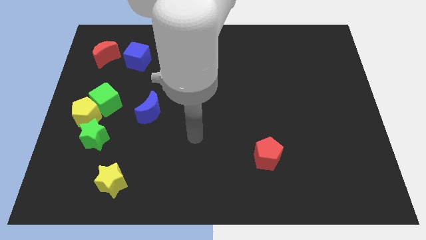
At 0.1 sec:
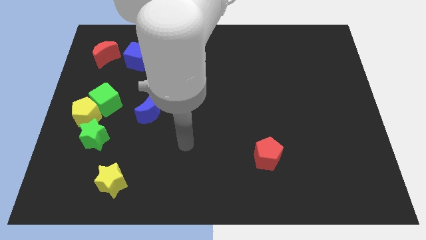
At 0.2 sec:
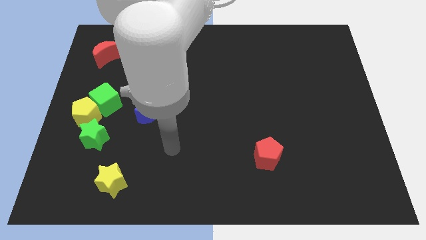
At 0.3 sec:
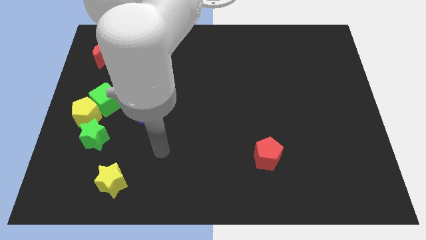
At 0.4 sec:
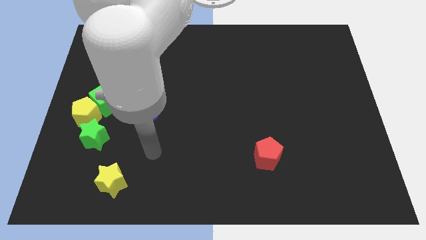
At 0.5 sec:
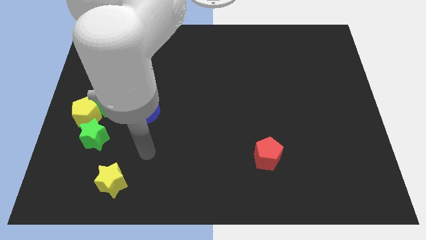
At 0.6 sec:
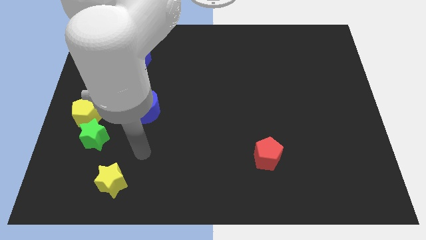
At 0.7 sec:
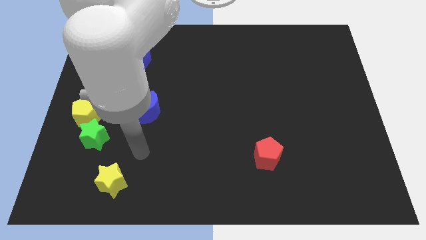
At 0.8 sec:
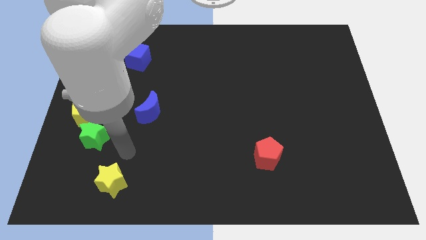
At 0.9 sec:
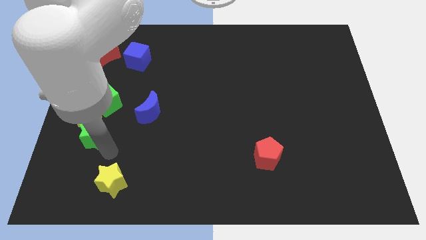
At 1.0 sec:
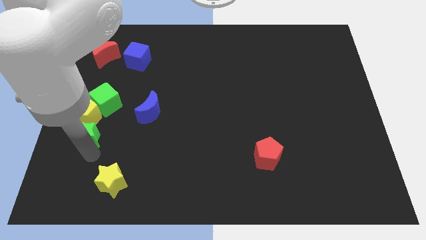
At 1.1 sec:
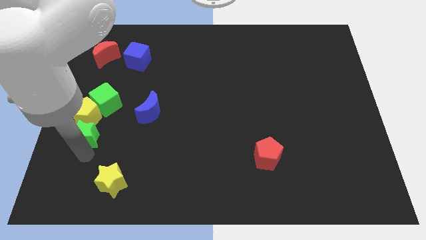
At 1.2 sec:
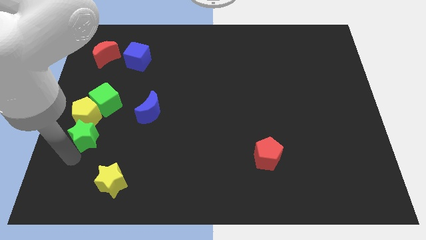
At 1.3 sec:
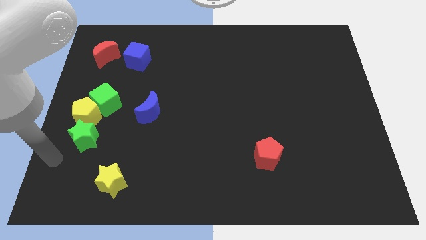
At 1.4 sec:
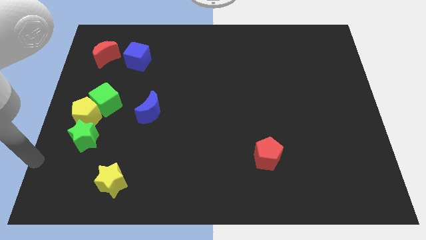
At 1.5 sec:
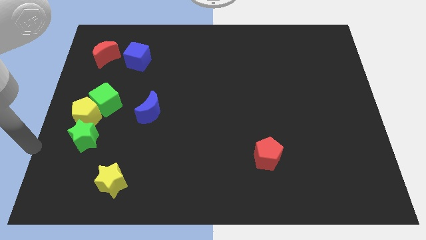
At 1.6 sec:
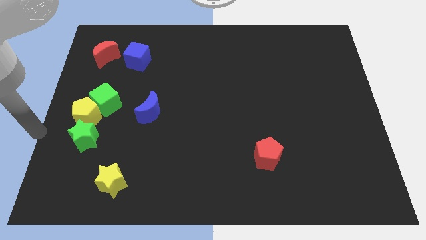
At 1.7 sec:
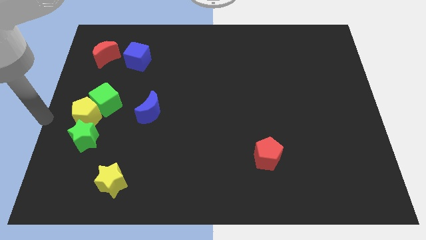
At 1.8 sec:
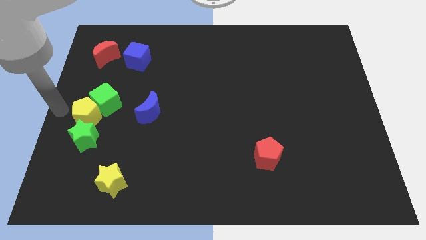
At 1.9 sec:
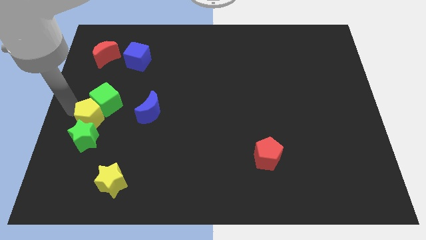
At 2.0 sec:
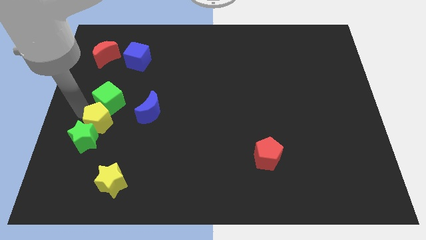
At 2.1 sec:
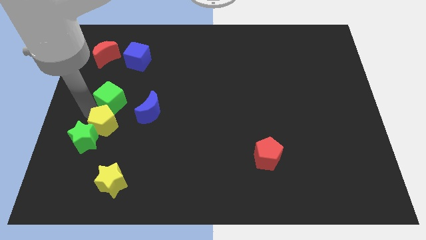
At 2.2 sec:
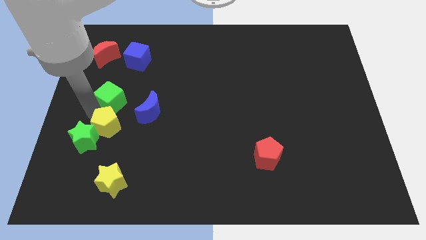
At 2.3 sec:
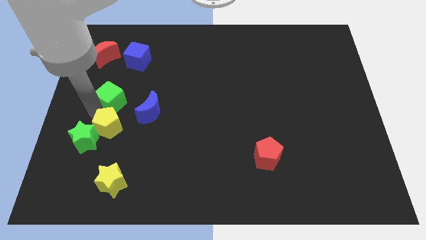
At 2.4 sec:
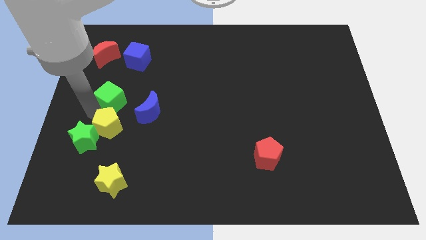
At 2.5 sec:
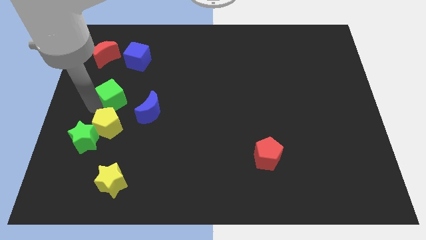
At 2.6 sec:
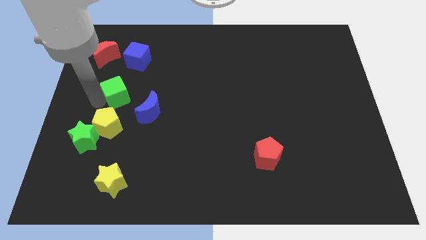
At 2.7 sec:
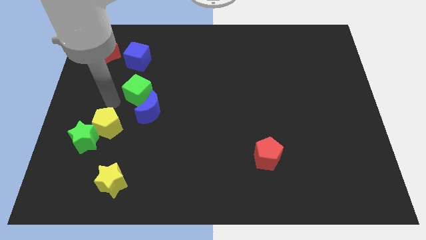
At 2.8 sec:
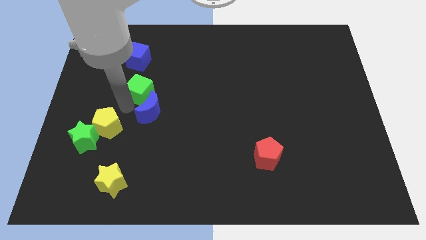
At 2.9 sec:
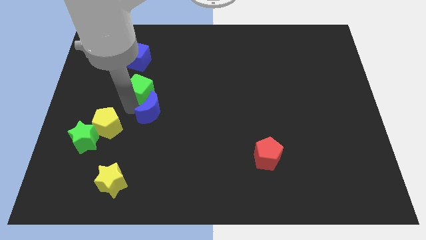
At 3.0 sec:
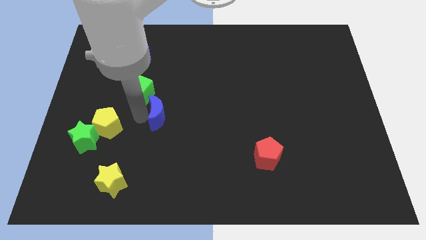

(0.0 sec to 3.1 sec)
push the yellow pentagon and green cube diagonal in line

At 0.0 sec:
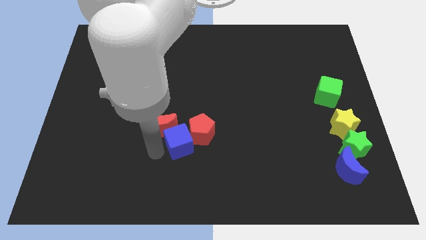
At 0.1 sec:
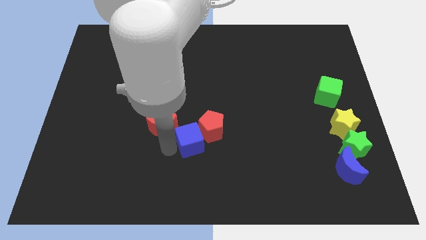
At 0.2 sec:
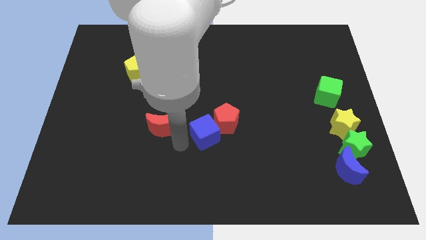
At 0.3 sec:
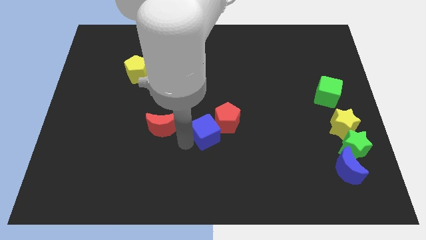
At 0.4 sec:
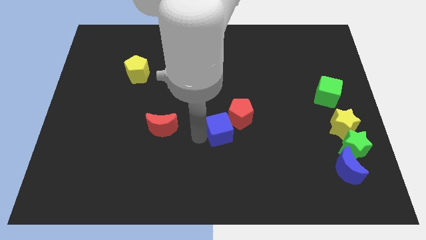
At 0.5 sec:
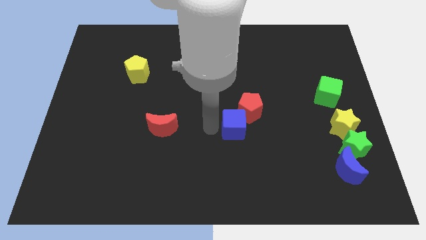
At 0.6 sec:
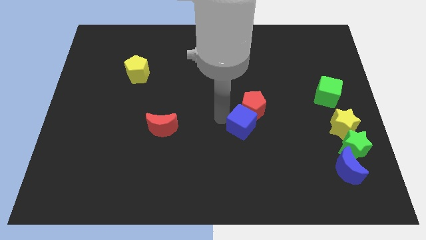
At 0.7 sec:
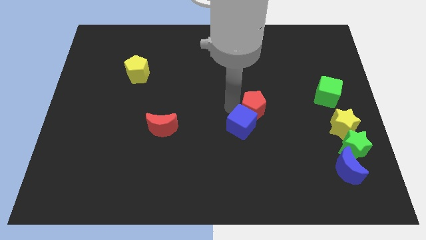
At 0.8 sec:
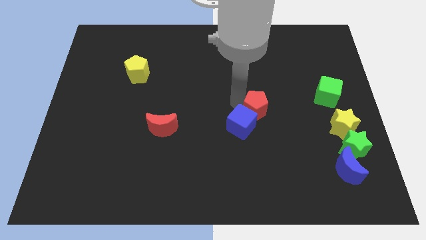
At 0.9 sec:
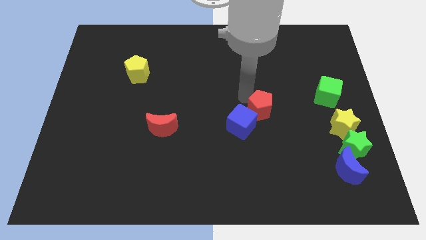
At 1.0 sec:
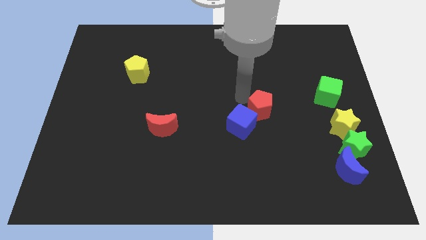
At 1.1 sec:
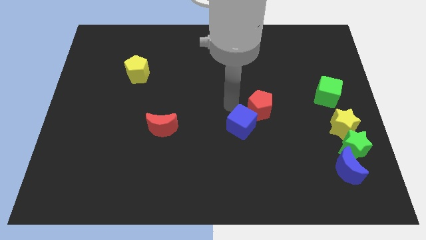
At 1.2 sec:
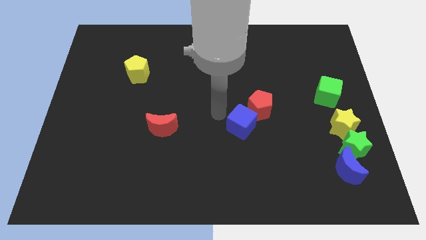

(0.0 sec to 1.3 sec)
separate the blue cube from the red moon

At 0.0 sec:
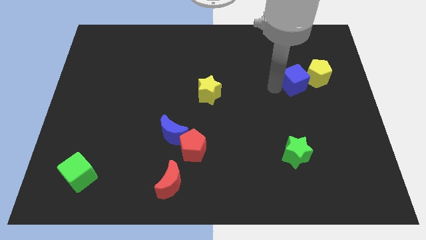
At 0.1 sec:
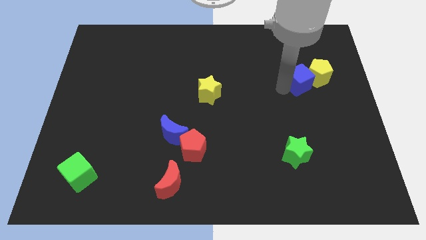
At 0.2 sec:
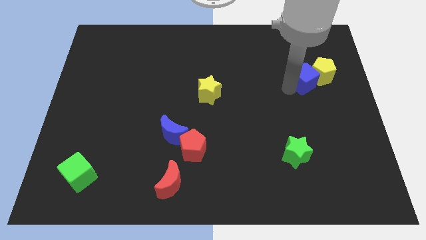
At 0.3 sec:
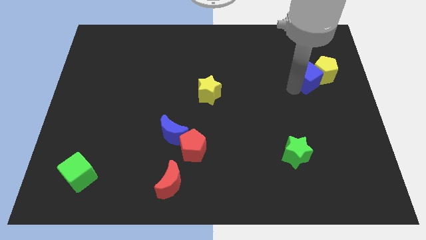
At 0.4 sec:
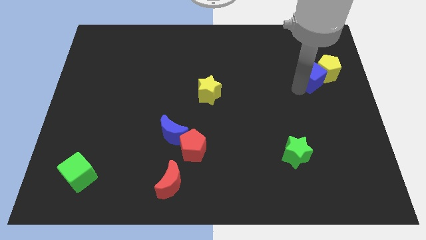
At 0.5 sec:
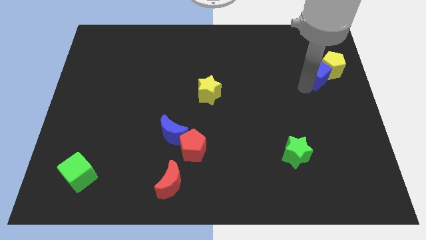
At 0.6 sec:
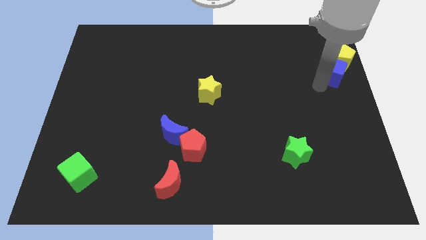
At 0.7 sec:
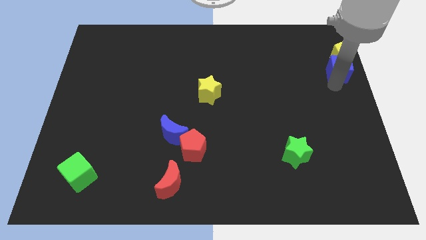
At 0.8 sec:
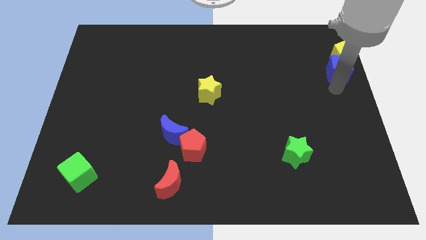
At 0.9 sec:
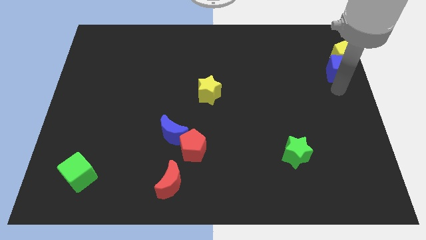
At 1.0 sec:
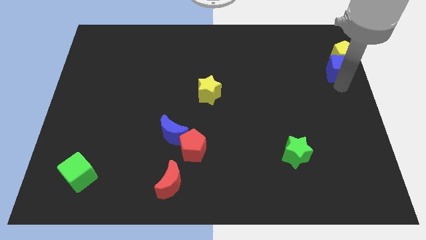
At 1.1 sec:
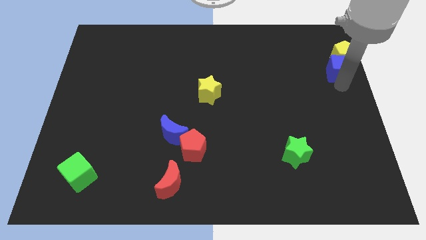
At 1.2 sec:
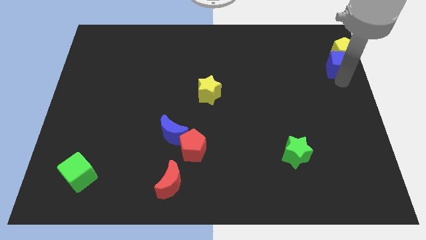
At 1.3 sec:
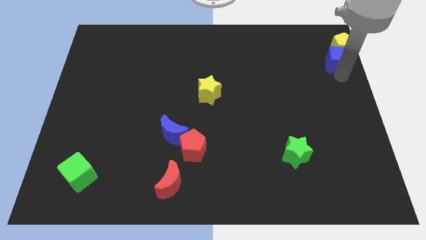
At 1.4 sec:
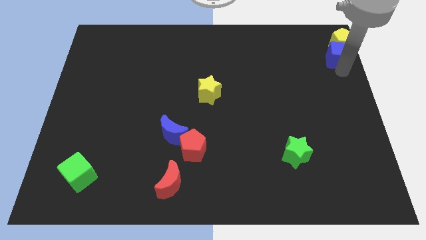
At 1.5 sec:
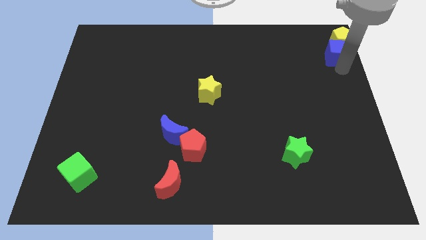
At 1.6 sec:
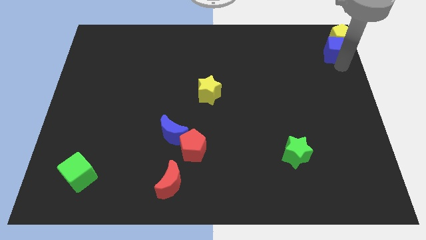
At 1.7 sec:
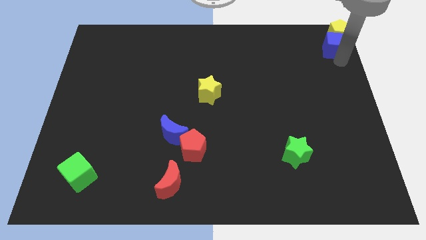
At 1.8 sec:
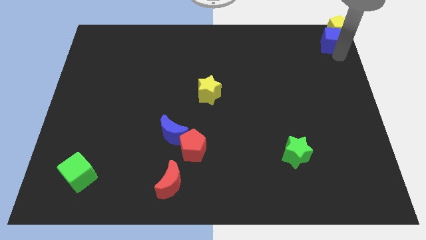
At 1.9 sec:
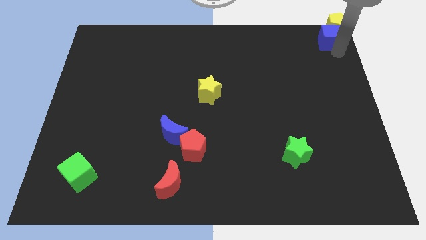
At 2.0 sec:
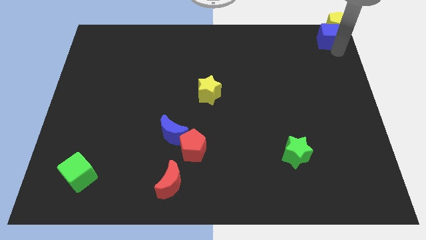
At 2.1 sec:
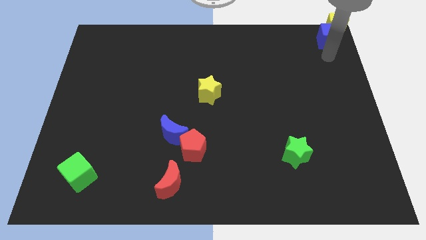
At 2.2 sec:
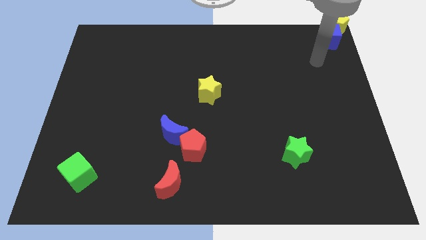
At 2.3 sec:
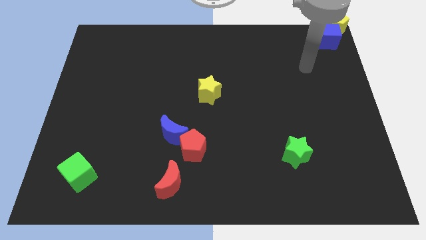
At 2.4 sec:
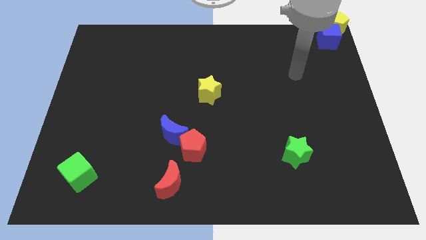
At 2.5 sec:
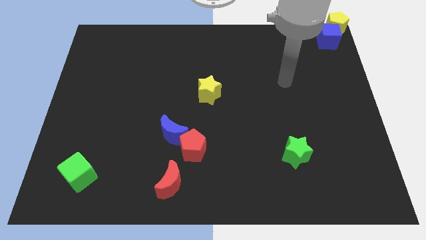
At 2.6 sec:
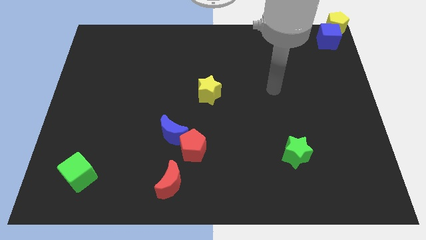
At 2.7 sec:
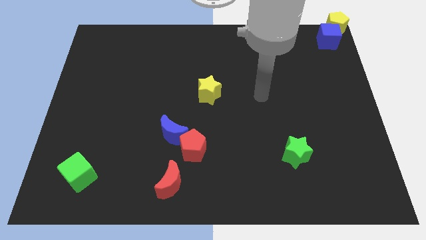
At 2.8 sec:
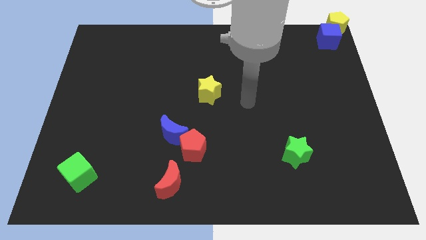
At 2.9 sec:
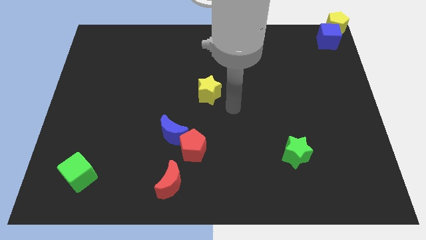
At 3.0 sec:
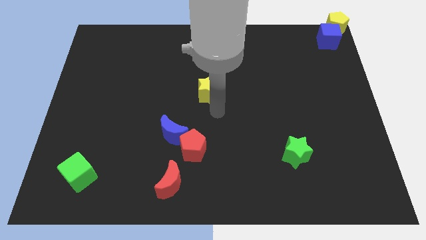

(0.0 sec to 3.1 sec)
push blue cube into yellow pentagon

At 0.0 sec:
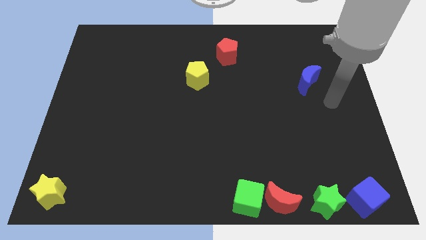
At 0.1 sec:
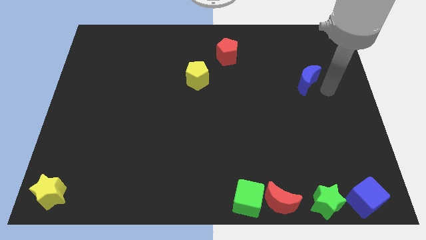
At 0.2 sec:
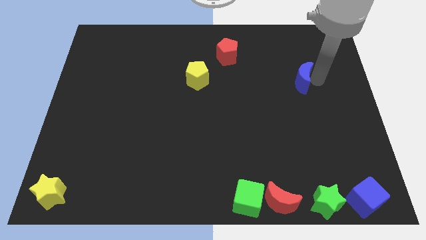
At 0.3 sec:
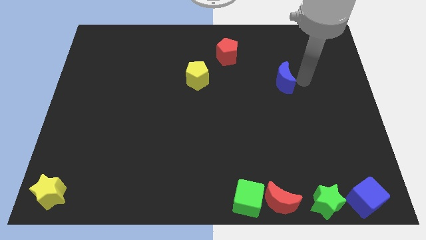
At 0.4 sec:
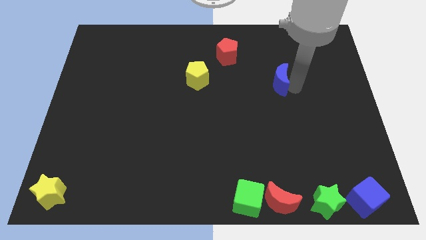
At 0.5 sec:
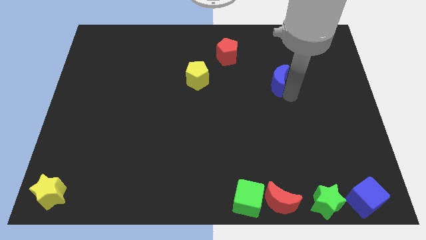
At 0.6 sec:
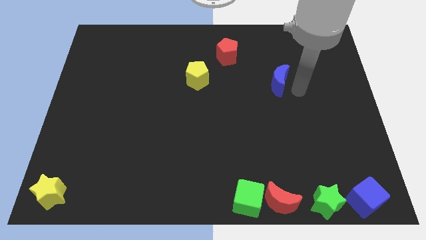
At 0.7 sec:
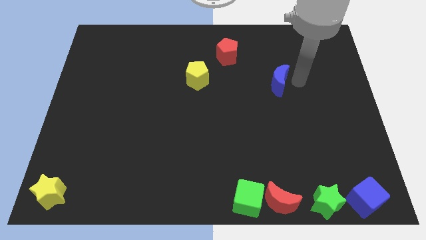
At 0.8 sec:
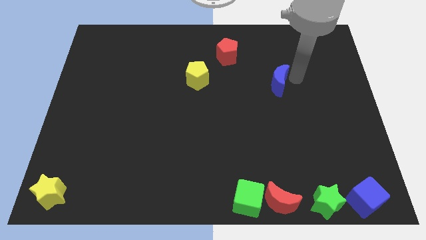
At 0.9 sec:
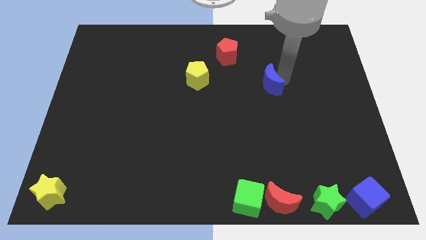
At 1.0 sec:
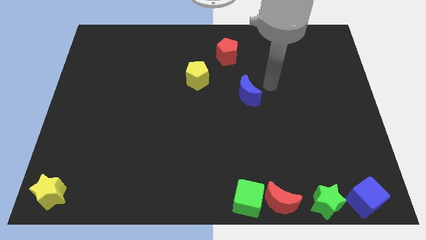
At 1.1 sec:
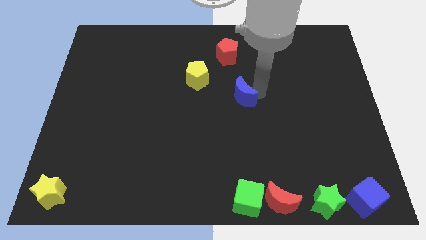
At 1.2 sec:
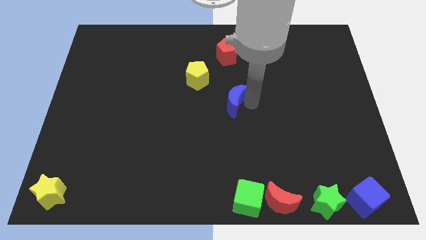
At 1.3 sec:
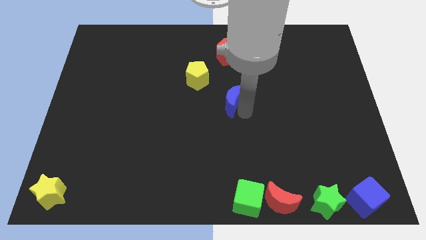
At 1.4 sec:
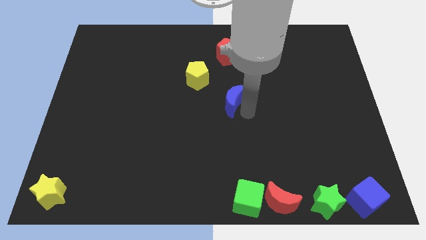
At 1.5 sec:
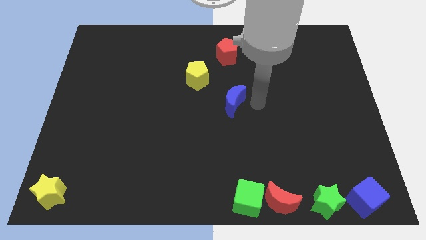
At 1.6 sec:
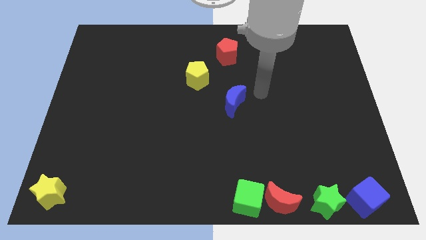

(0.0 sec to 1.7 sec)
move the blue moon towards the center of the board
